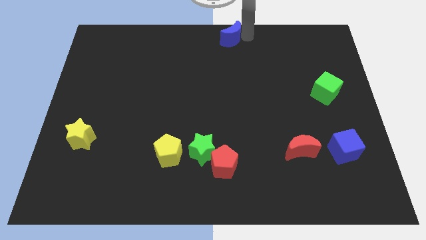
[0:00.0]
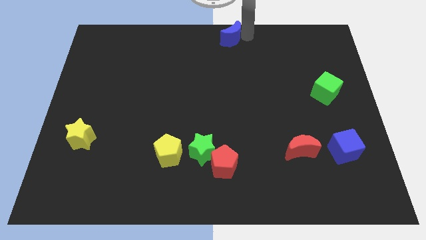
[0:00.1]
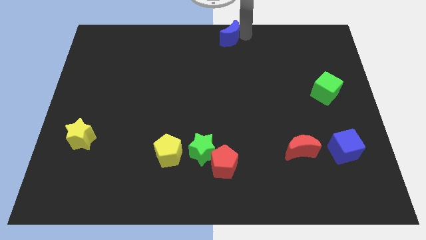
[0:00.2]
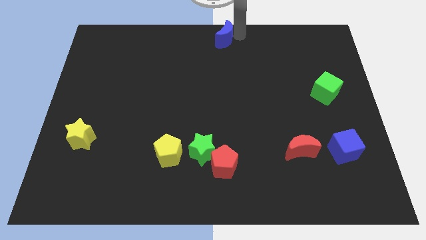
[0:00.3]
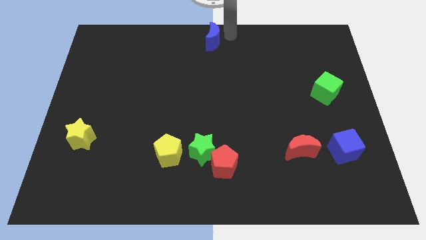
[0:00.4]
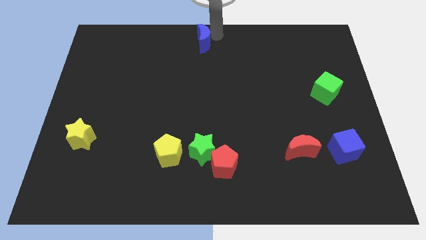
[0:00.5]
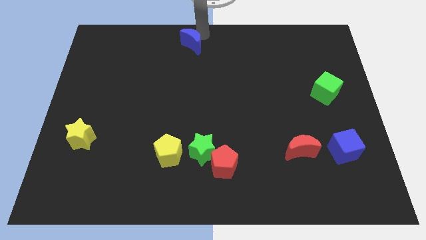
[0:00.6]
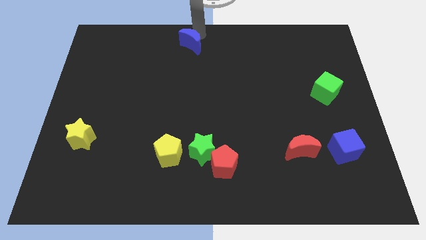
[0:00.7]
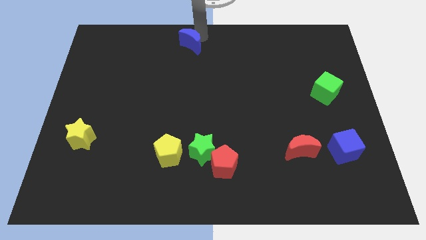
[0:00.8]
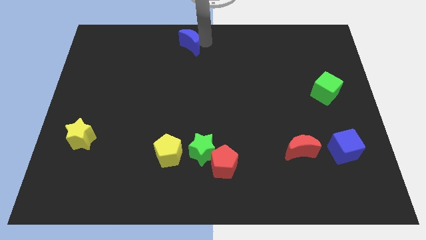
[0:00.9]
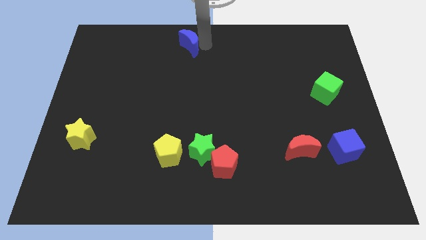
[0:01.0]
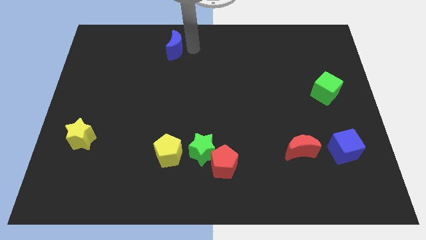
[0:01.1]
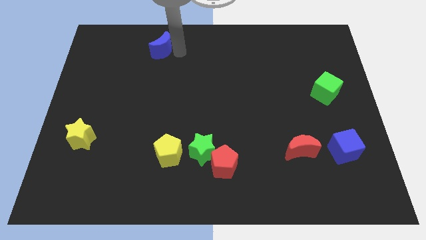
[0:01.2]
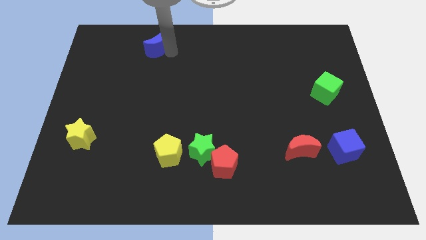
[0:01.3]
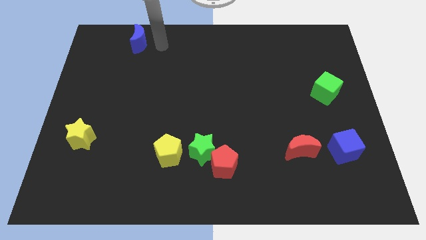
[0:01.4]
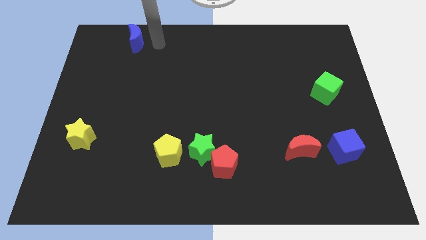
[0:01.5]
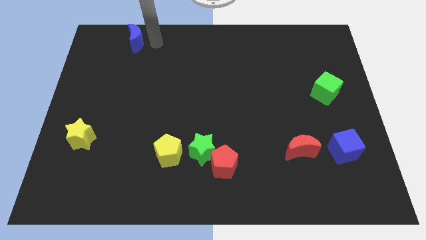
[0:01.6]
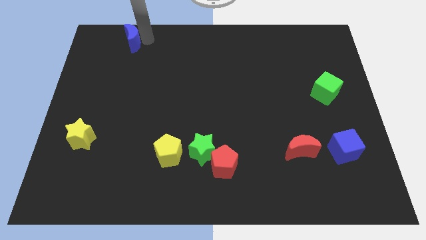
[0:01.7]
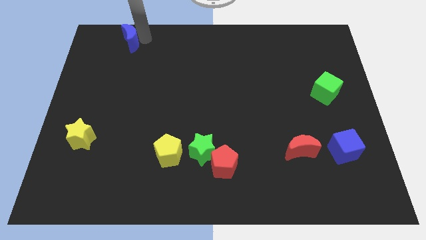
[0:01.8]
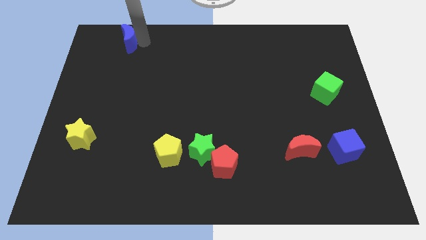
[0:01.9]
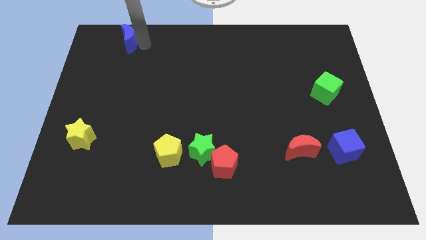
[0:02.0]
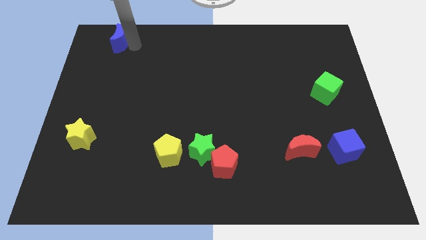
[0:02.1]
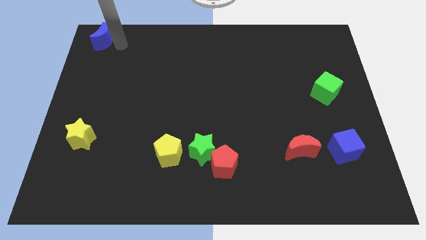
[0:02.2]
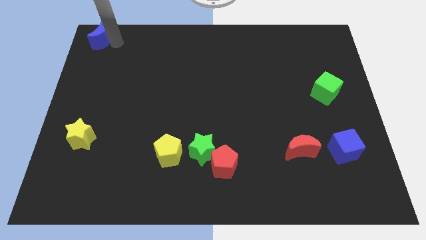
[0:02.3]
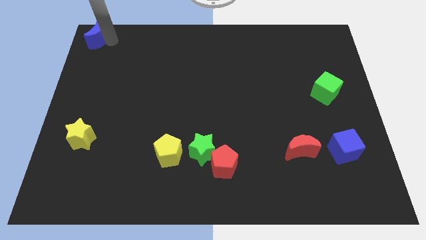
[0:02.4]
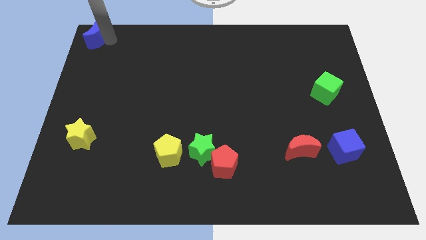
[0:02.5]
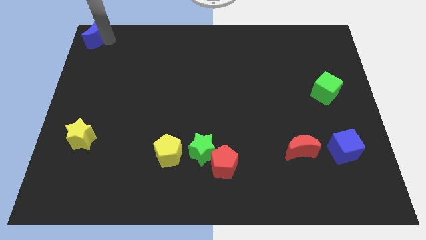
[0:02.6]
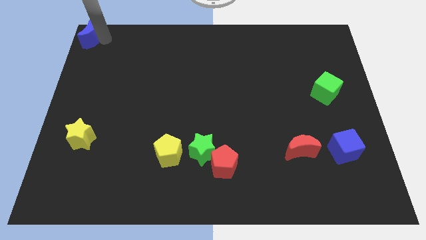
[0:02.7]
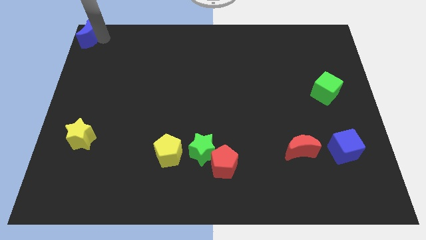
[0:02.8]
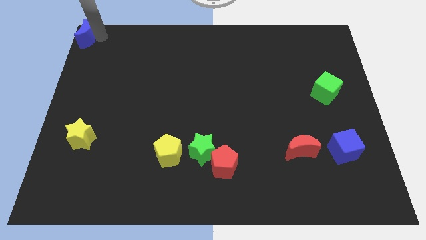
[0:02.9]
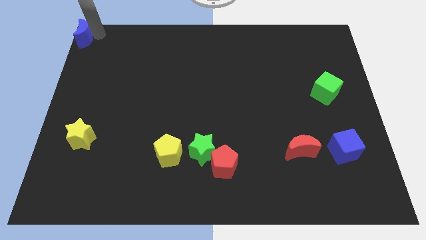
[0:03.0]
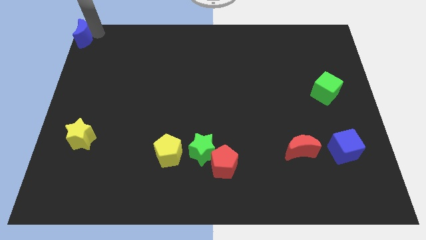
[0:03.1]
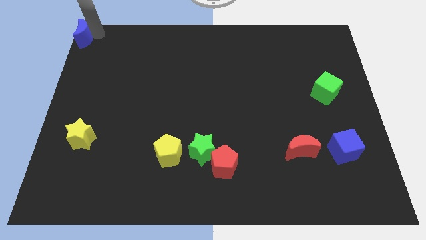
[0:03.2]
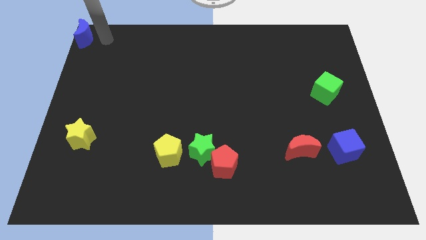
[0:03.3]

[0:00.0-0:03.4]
place the blue moon to the top left corner of the board

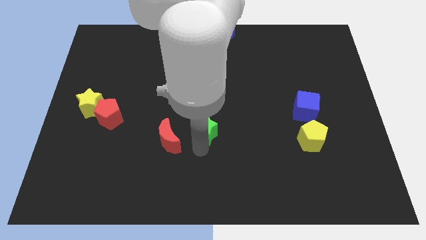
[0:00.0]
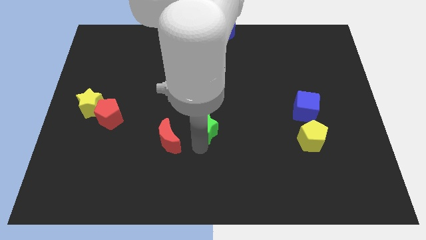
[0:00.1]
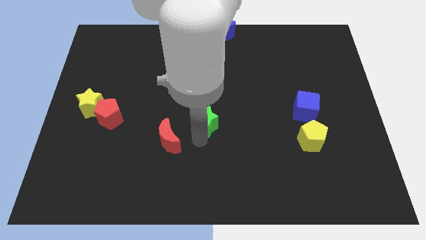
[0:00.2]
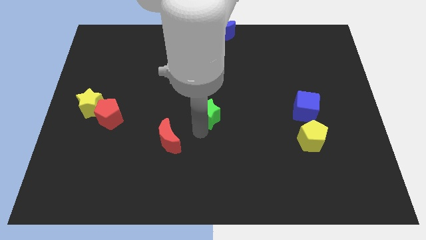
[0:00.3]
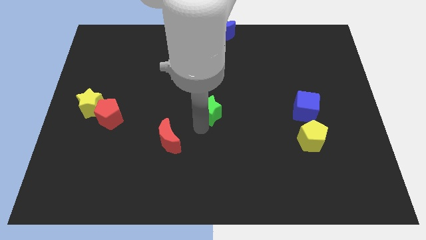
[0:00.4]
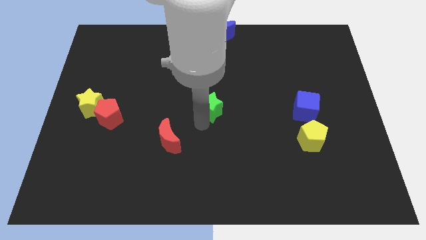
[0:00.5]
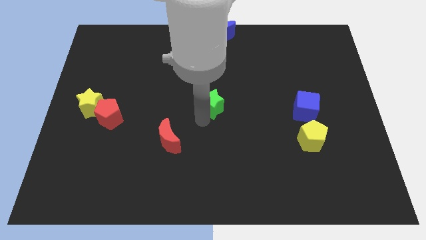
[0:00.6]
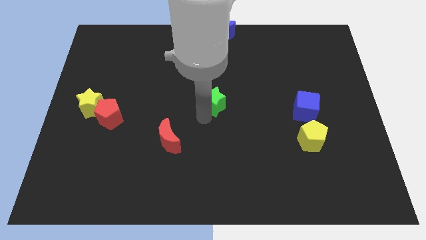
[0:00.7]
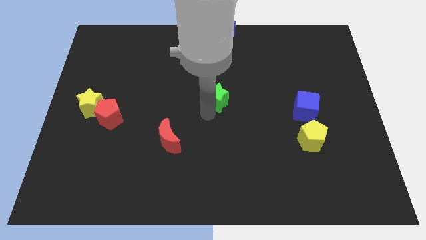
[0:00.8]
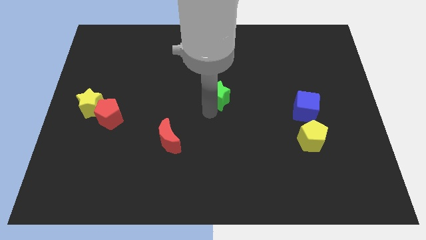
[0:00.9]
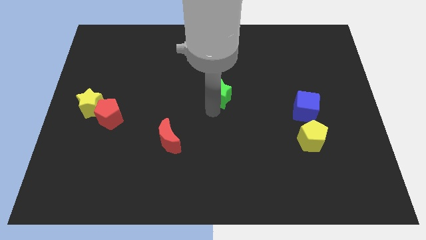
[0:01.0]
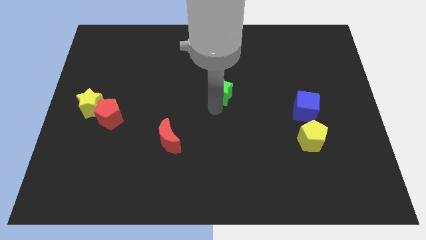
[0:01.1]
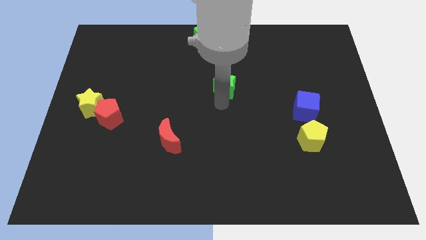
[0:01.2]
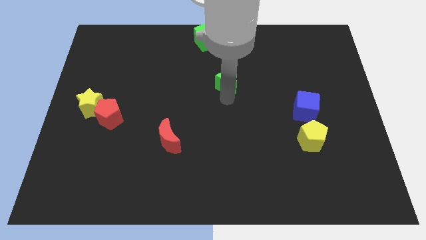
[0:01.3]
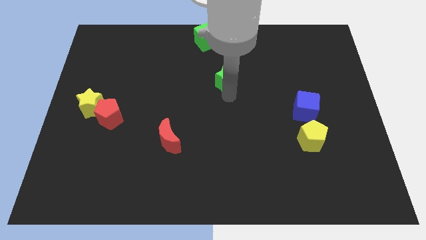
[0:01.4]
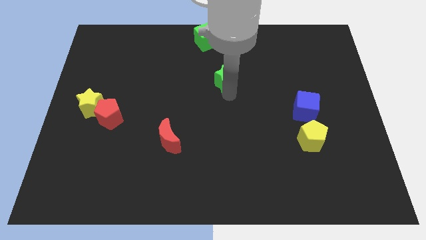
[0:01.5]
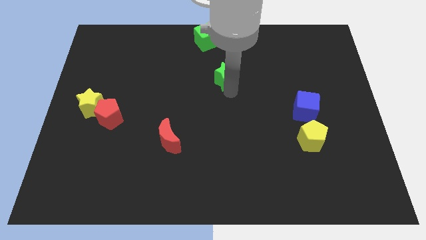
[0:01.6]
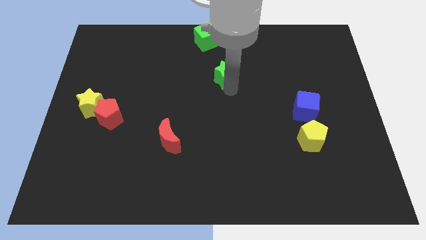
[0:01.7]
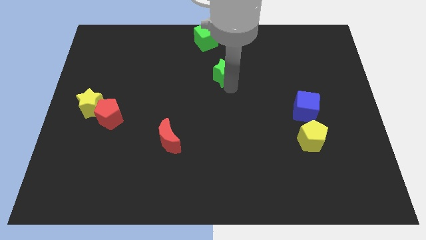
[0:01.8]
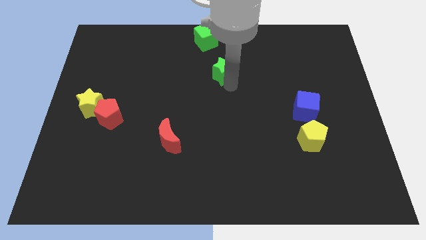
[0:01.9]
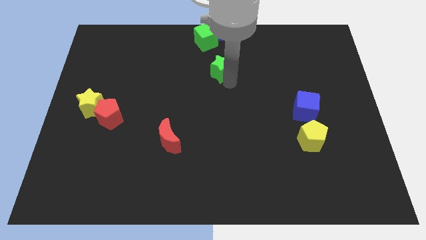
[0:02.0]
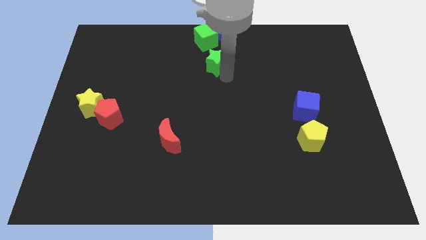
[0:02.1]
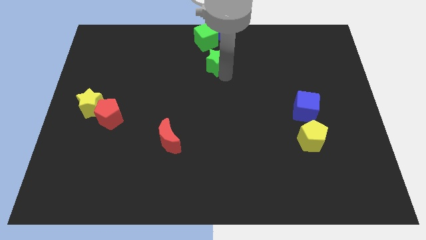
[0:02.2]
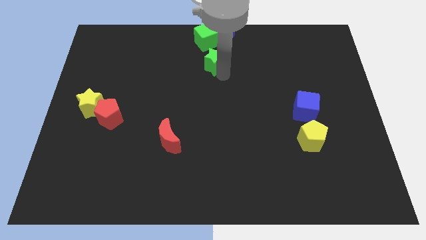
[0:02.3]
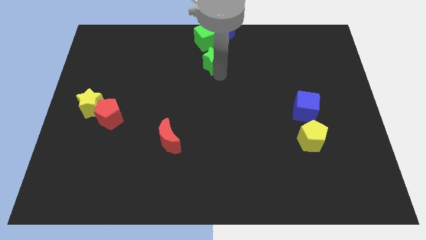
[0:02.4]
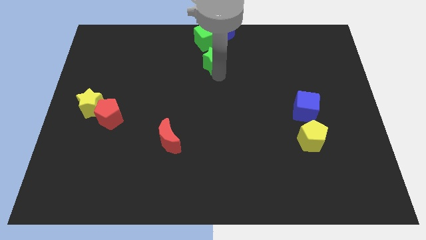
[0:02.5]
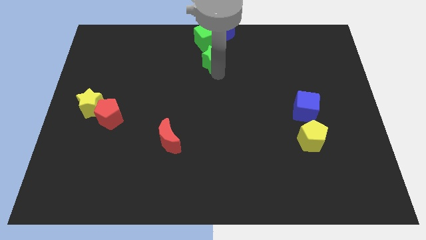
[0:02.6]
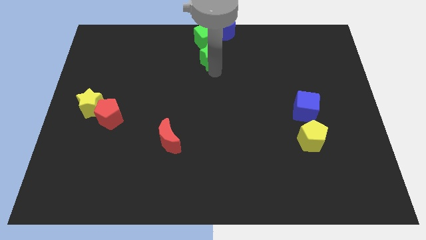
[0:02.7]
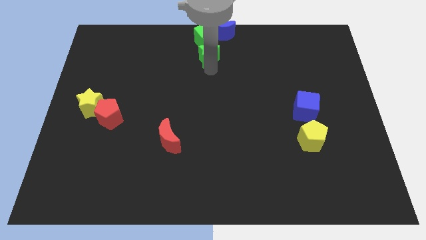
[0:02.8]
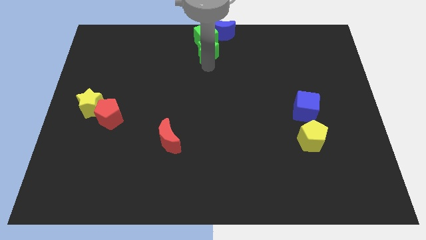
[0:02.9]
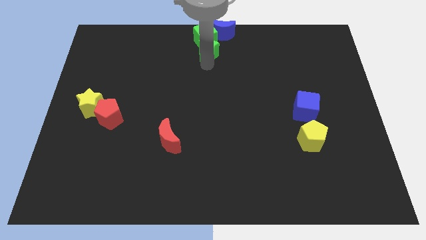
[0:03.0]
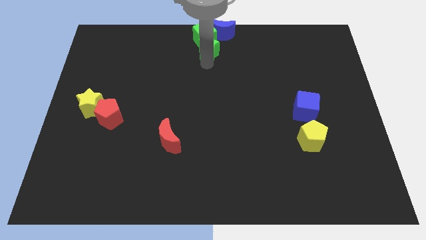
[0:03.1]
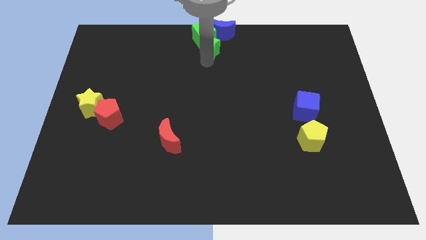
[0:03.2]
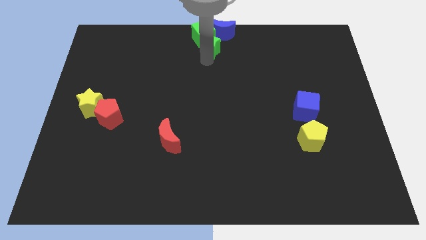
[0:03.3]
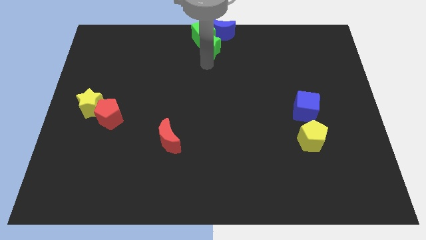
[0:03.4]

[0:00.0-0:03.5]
move the green star to the bottom of the green cube

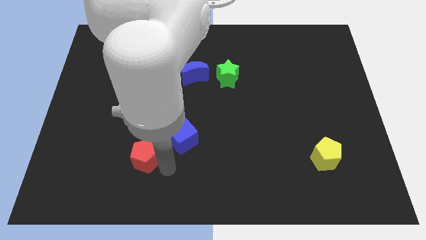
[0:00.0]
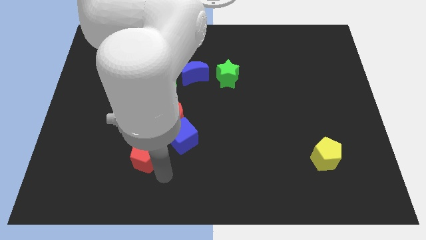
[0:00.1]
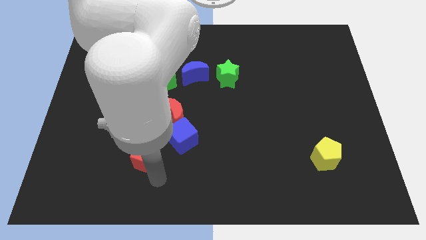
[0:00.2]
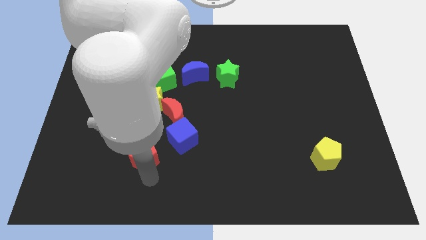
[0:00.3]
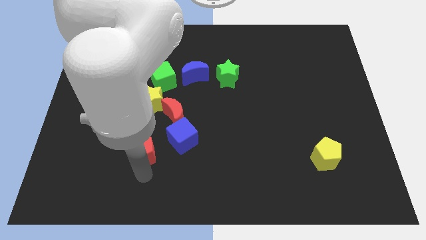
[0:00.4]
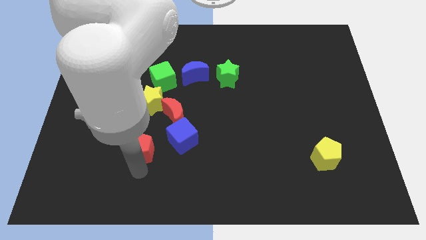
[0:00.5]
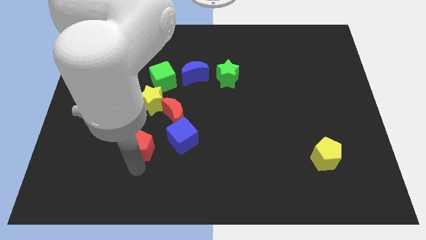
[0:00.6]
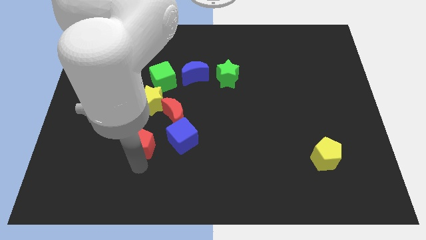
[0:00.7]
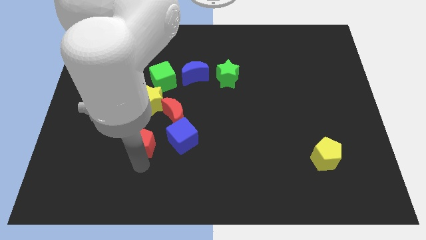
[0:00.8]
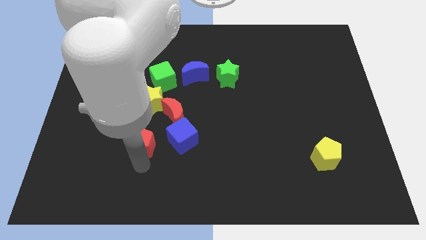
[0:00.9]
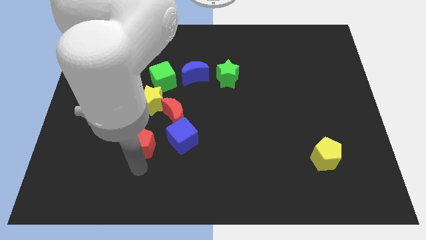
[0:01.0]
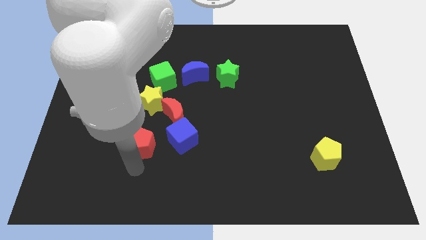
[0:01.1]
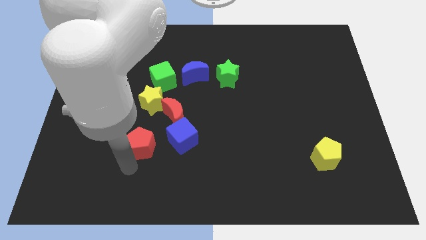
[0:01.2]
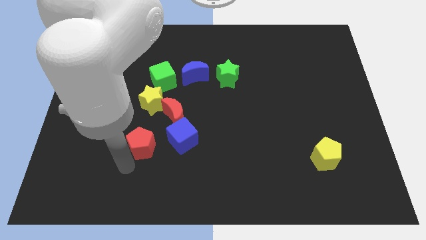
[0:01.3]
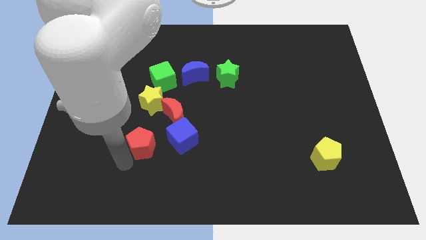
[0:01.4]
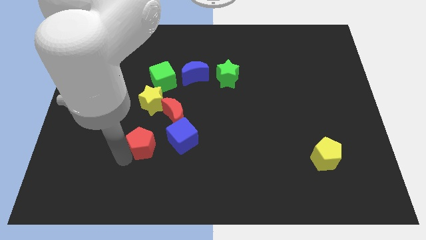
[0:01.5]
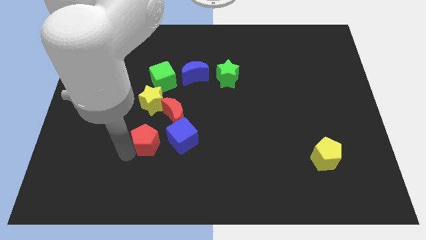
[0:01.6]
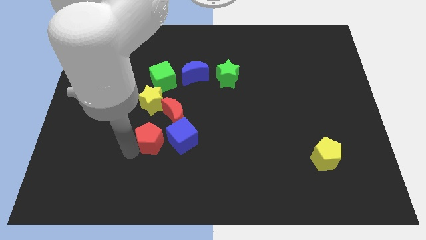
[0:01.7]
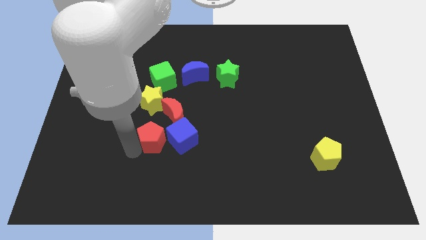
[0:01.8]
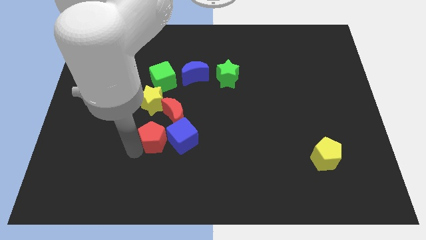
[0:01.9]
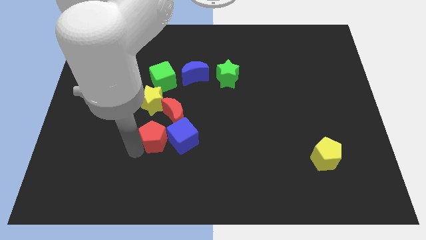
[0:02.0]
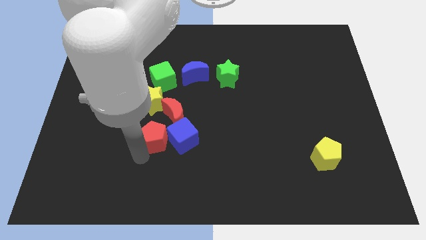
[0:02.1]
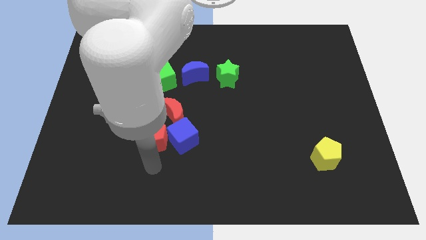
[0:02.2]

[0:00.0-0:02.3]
move the red pentagon left to blue cube
